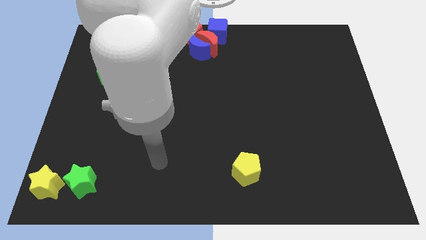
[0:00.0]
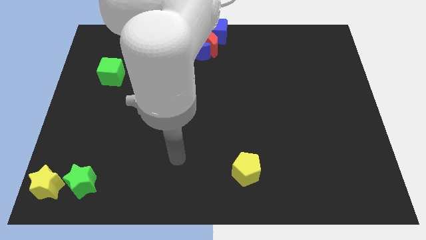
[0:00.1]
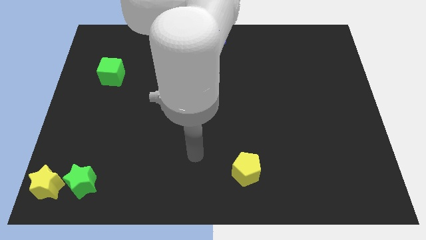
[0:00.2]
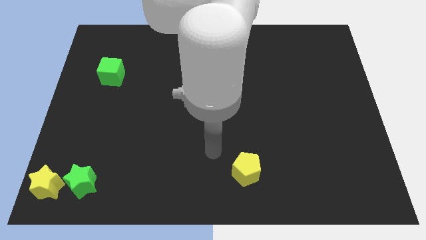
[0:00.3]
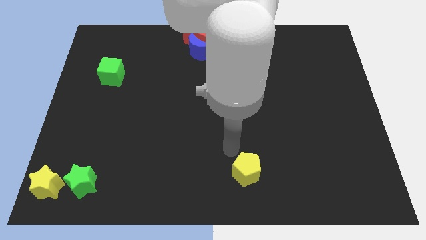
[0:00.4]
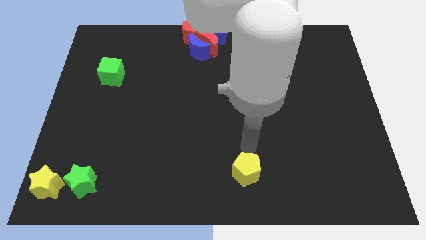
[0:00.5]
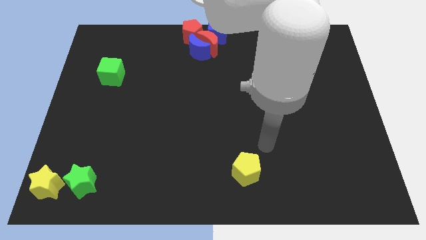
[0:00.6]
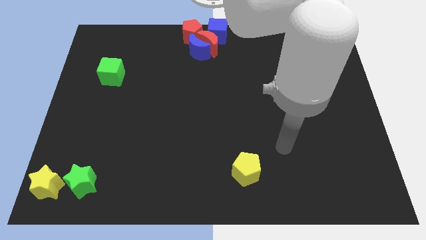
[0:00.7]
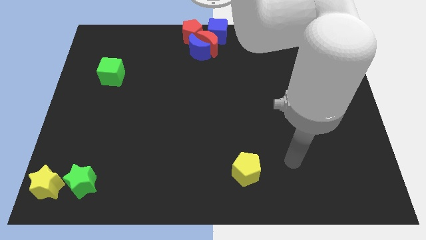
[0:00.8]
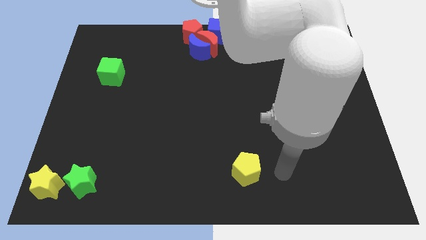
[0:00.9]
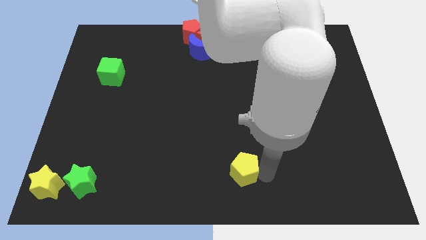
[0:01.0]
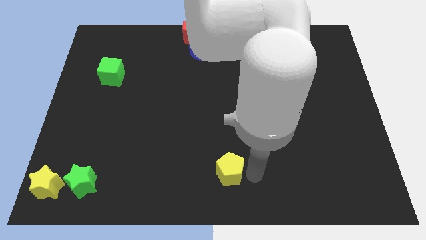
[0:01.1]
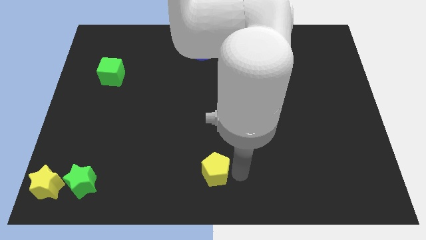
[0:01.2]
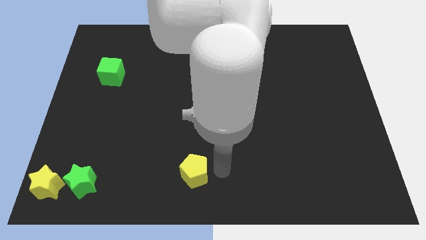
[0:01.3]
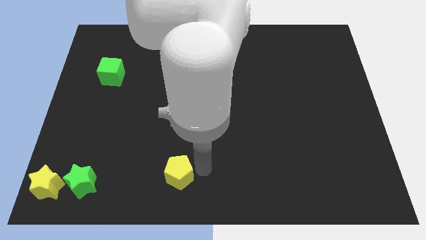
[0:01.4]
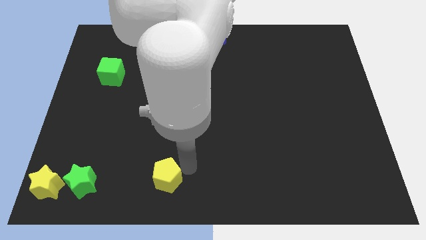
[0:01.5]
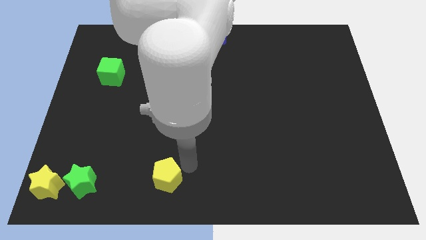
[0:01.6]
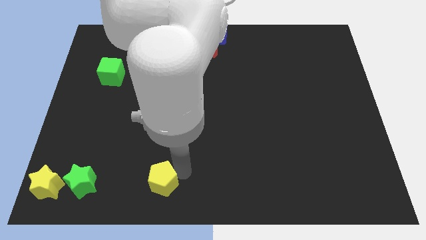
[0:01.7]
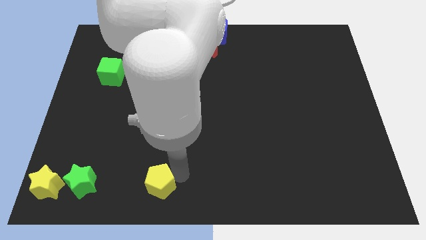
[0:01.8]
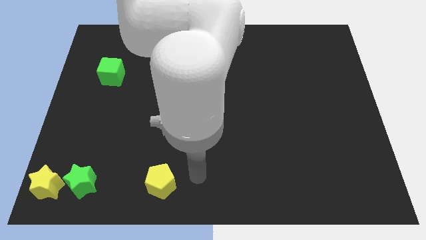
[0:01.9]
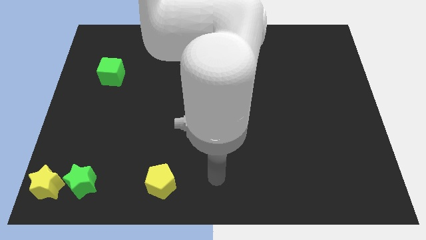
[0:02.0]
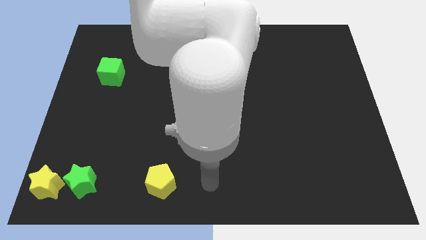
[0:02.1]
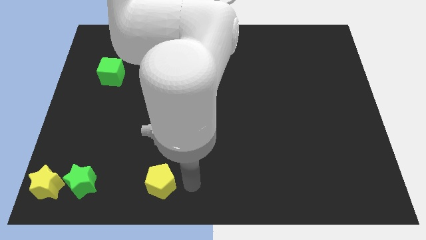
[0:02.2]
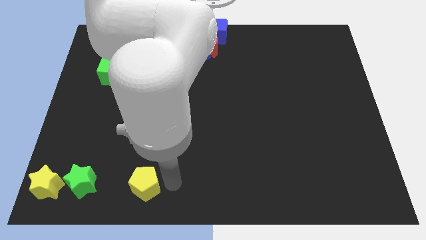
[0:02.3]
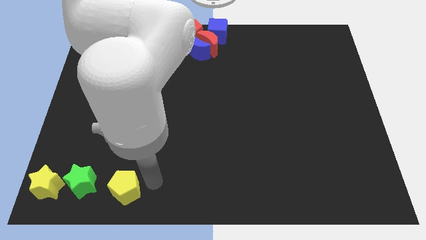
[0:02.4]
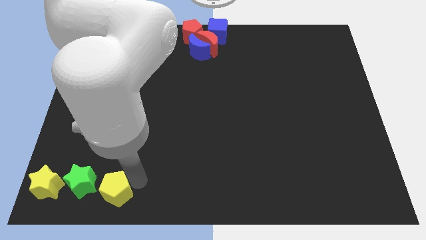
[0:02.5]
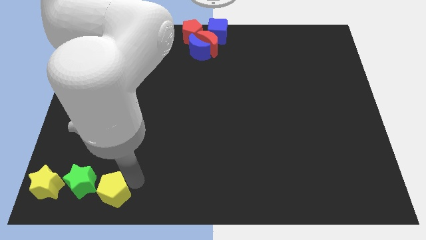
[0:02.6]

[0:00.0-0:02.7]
push the yellow pentagon towards the left side of the board

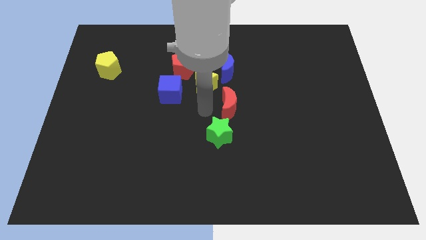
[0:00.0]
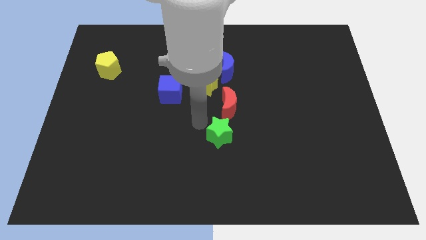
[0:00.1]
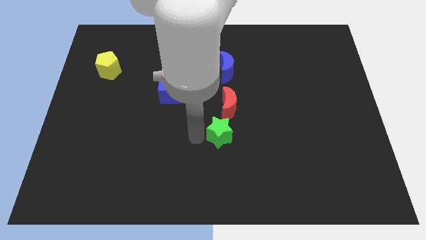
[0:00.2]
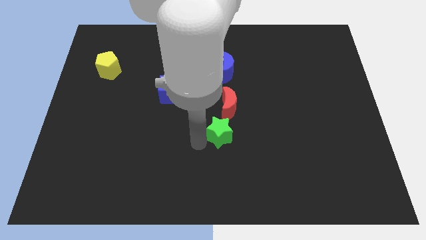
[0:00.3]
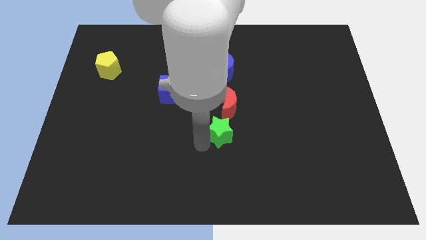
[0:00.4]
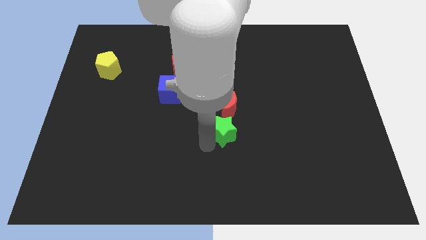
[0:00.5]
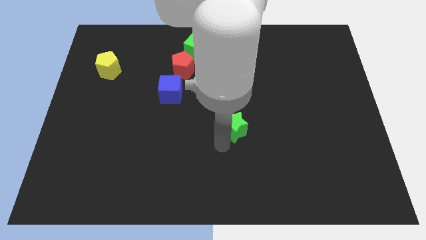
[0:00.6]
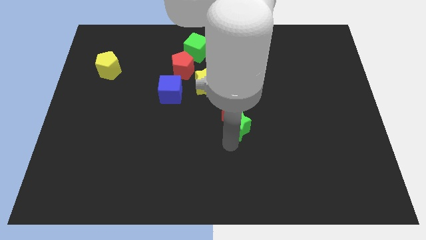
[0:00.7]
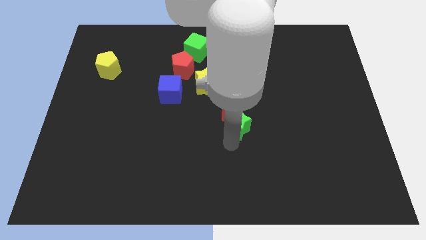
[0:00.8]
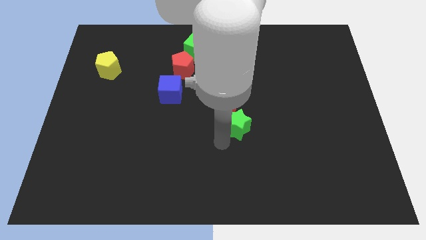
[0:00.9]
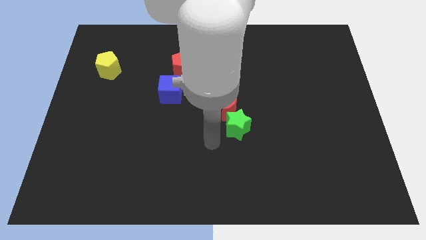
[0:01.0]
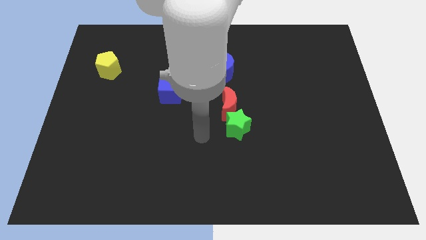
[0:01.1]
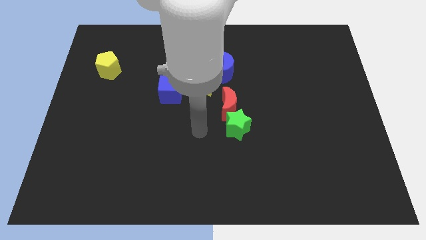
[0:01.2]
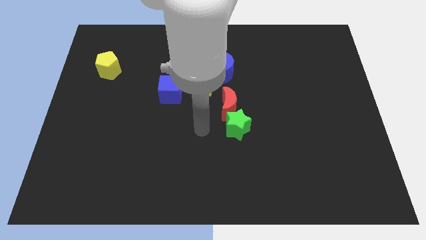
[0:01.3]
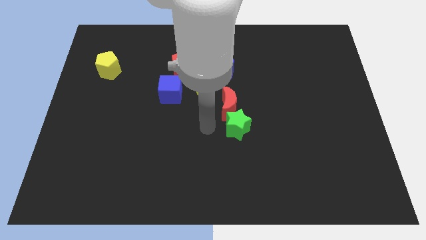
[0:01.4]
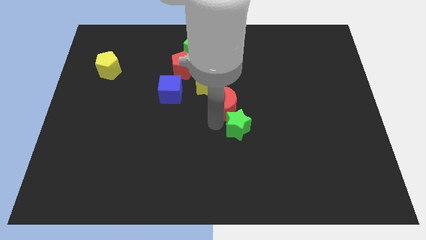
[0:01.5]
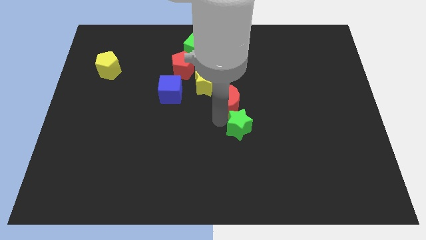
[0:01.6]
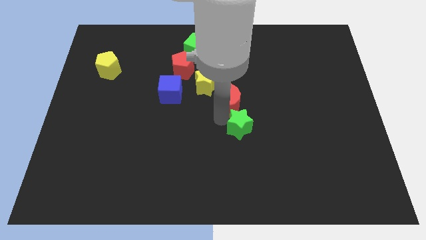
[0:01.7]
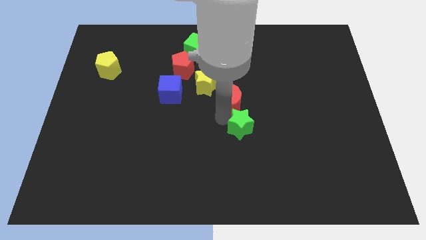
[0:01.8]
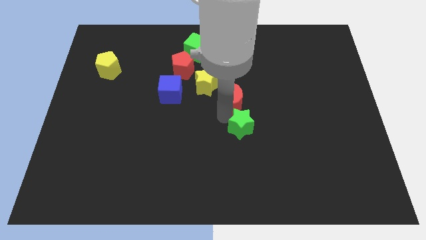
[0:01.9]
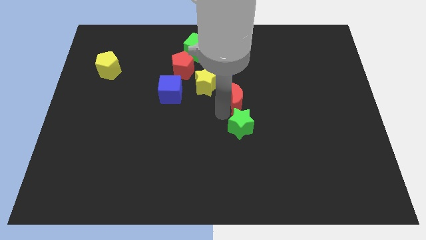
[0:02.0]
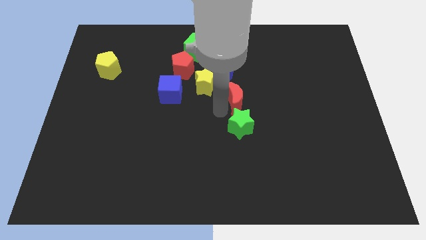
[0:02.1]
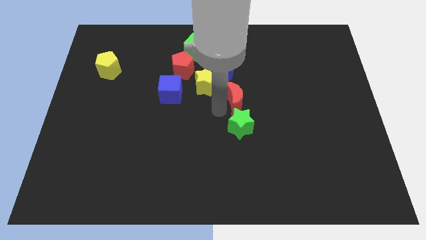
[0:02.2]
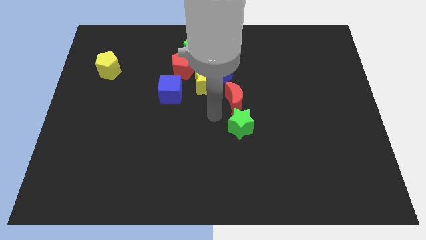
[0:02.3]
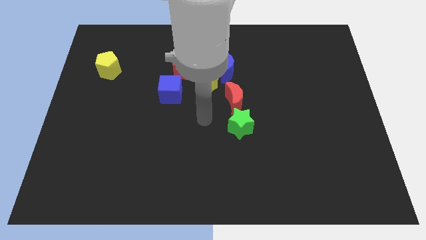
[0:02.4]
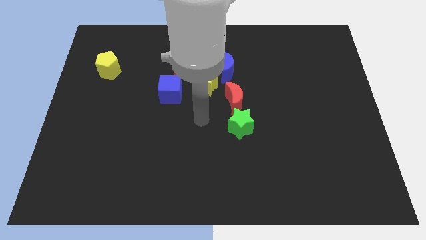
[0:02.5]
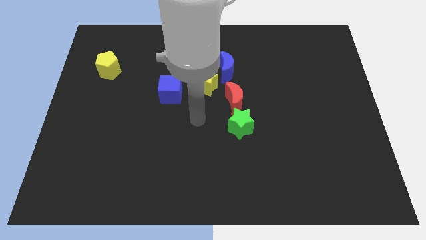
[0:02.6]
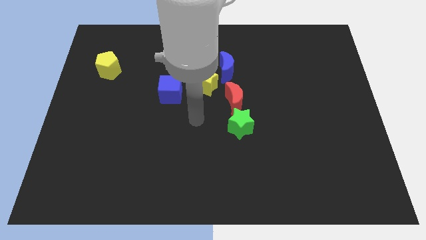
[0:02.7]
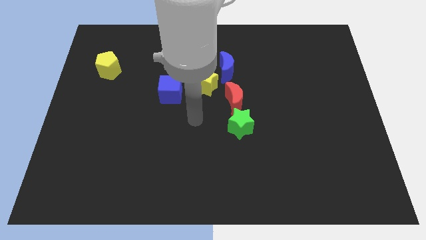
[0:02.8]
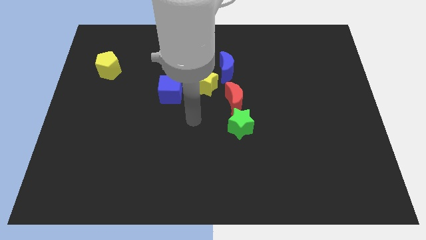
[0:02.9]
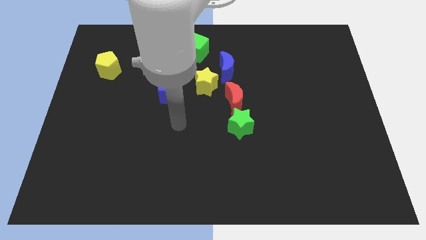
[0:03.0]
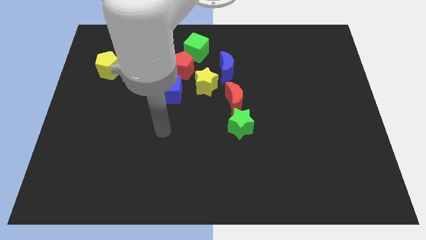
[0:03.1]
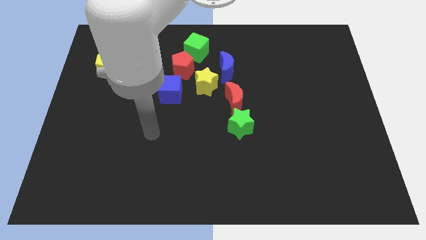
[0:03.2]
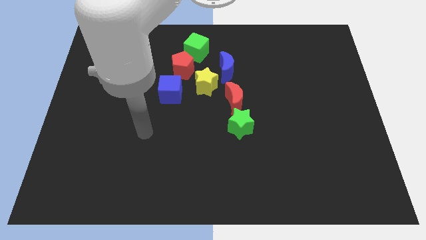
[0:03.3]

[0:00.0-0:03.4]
adjust the red crescent and green star to the bottom right side of the blue crescent

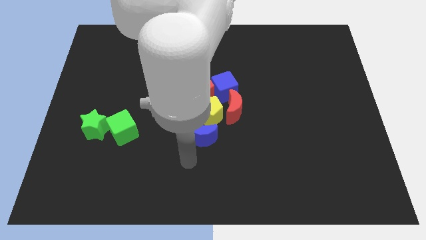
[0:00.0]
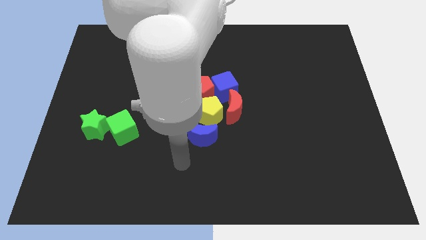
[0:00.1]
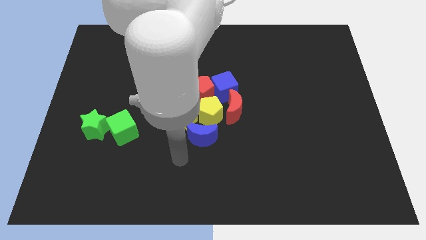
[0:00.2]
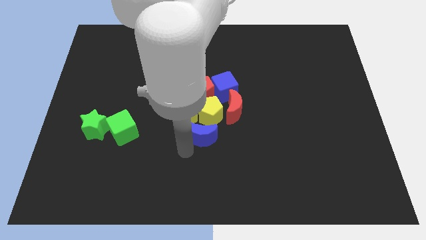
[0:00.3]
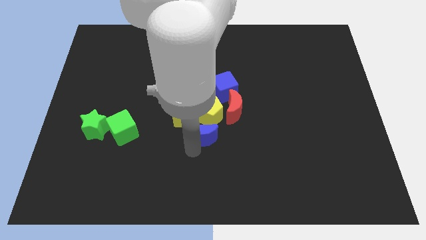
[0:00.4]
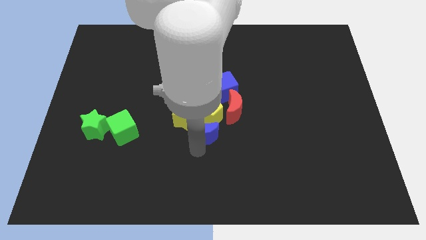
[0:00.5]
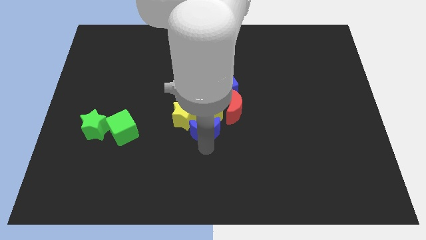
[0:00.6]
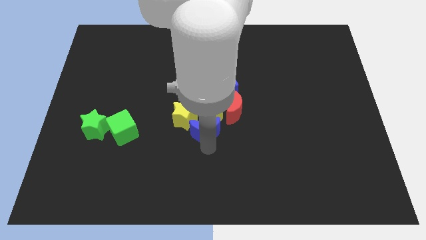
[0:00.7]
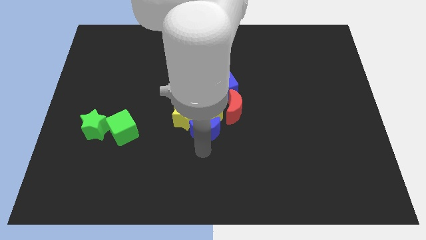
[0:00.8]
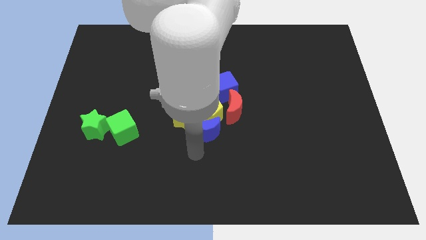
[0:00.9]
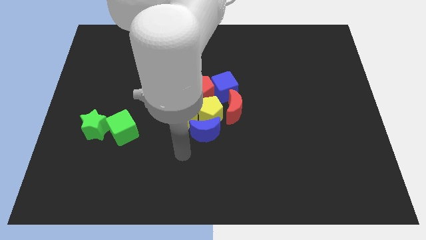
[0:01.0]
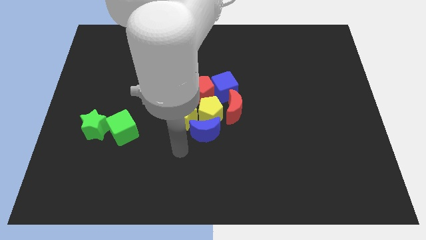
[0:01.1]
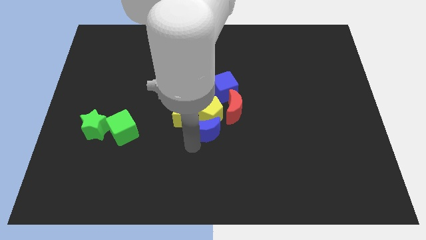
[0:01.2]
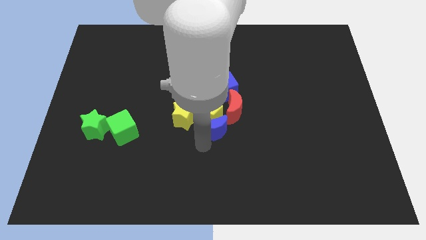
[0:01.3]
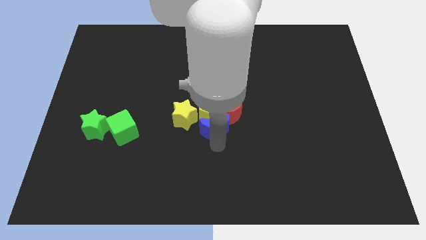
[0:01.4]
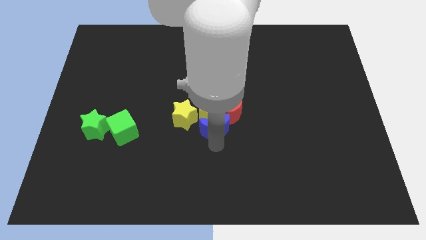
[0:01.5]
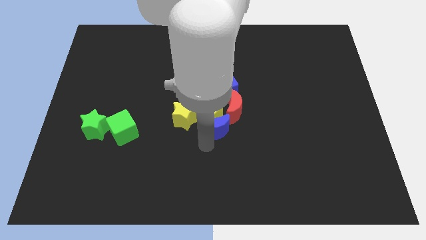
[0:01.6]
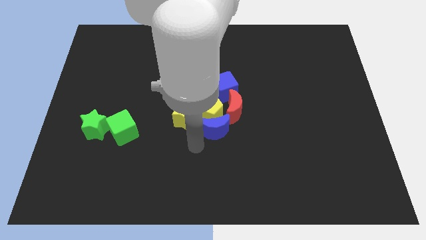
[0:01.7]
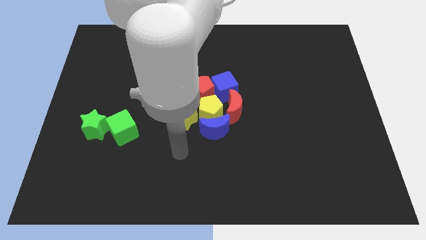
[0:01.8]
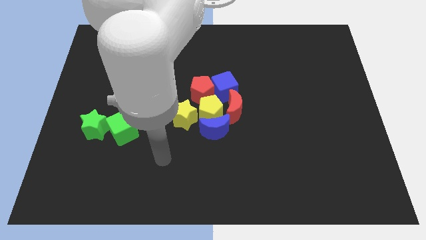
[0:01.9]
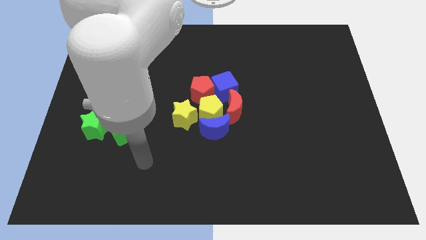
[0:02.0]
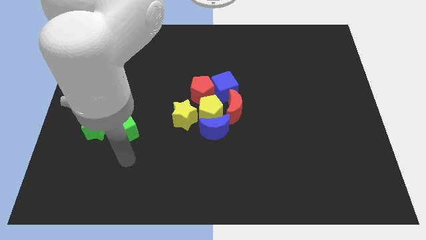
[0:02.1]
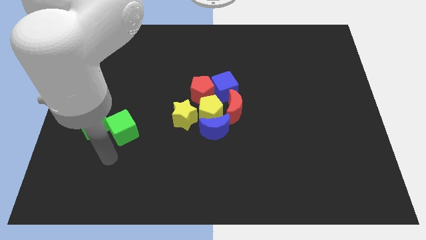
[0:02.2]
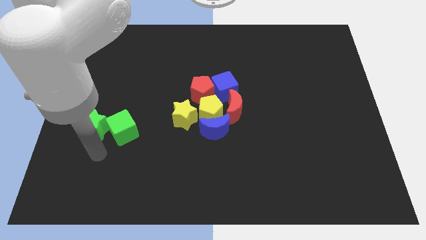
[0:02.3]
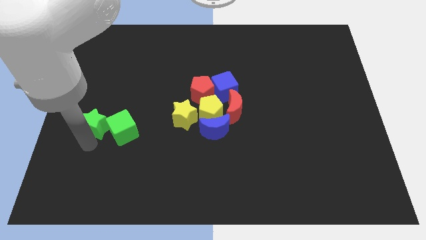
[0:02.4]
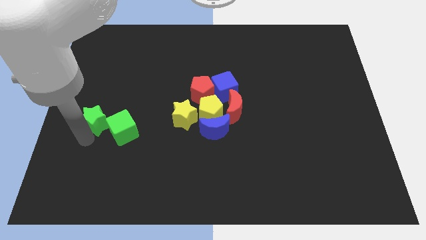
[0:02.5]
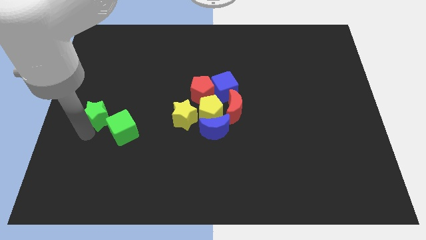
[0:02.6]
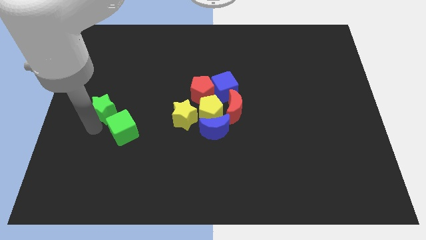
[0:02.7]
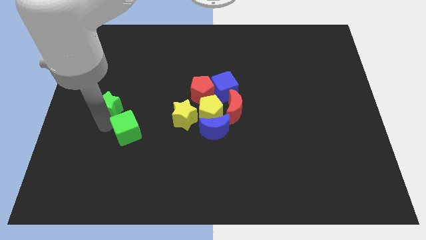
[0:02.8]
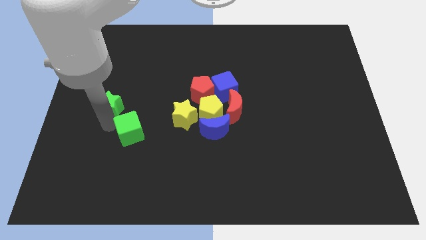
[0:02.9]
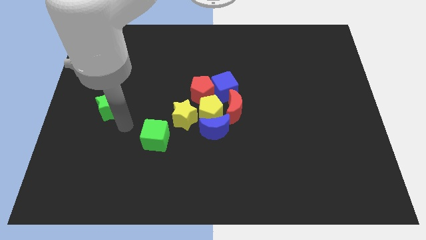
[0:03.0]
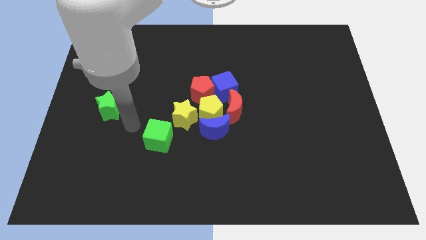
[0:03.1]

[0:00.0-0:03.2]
separate green star from the green cube
